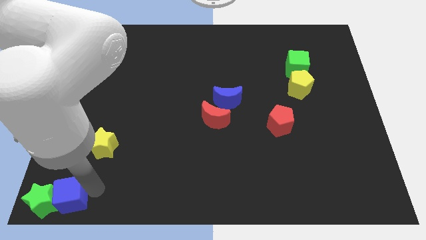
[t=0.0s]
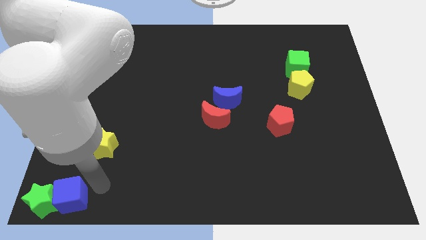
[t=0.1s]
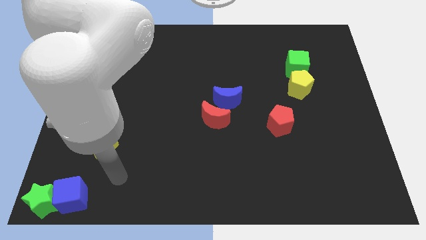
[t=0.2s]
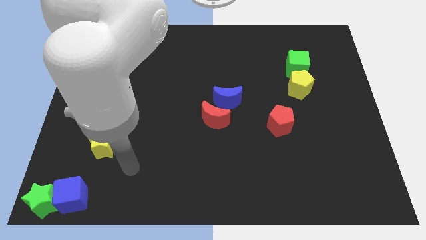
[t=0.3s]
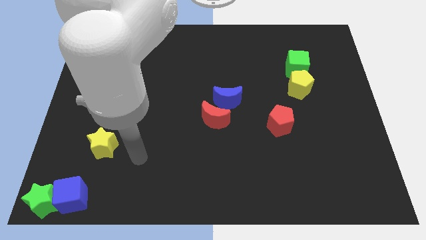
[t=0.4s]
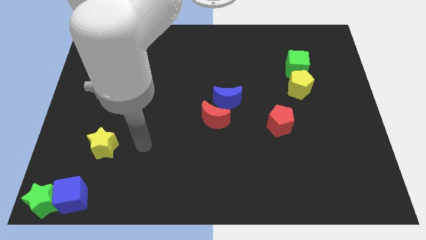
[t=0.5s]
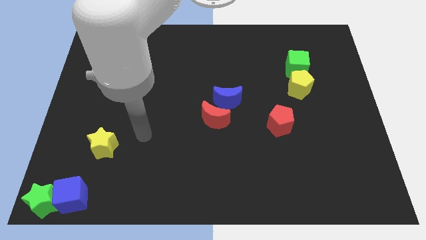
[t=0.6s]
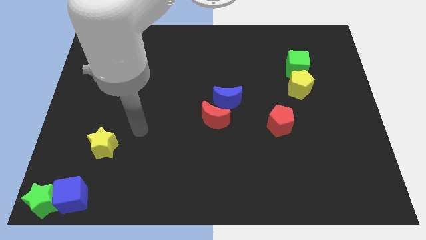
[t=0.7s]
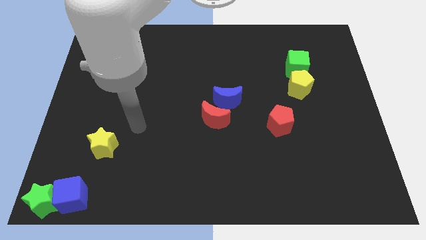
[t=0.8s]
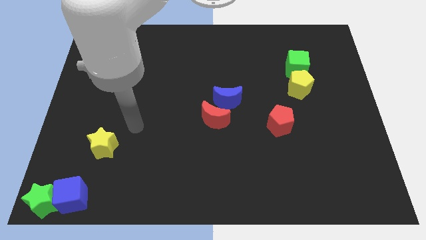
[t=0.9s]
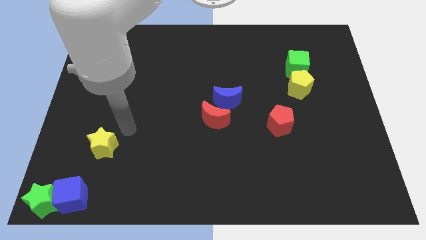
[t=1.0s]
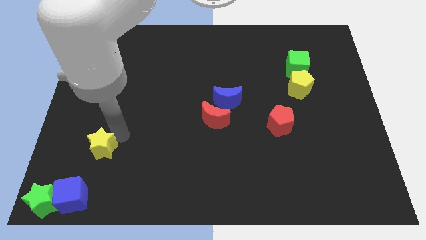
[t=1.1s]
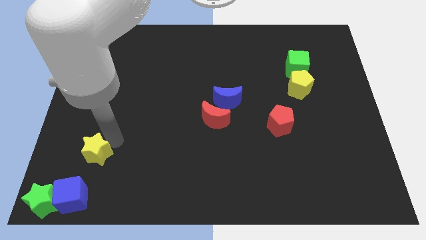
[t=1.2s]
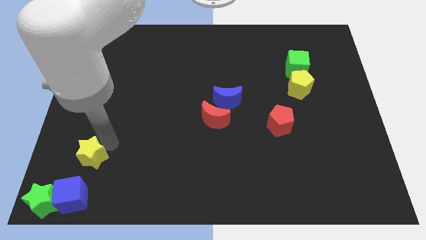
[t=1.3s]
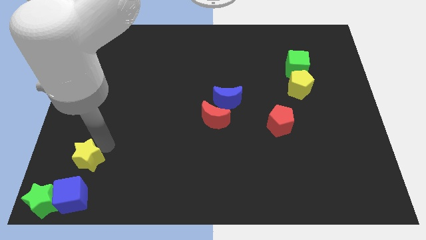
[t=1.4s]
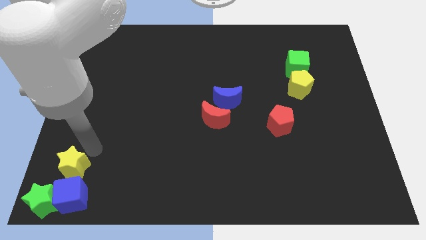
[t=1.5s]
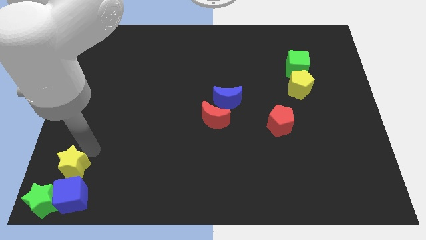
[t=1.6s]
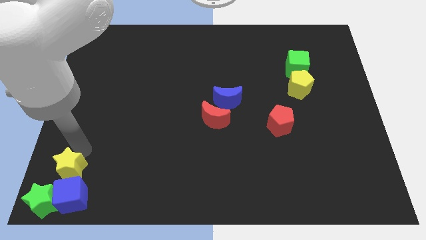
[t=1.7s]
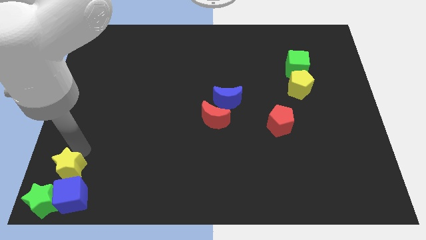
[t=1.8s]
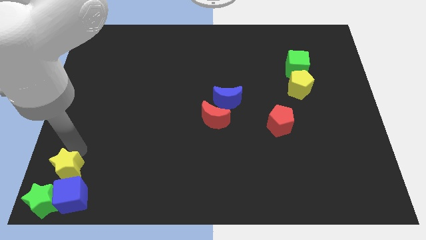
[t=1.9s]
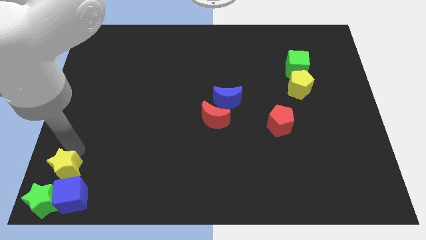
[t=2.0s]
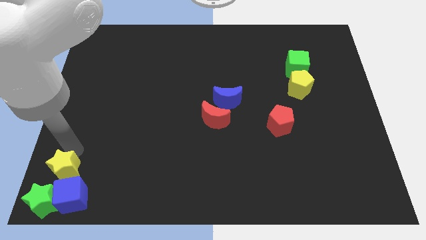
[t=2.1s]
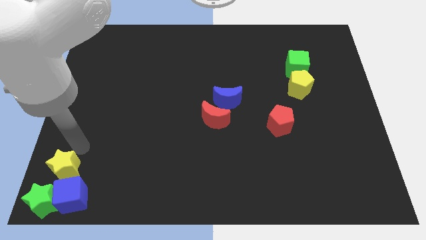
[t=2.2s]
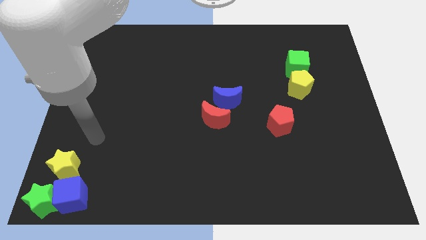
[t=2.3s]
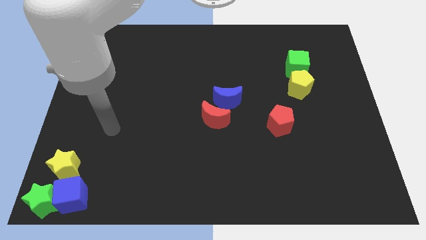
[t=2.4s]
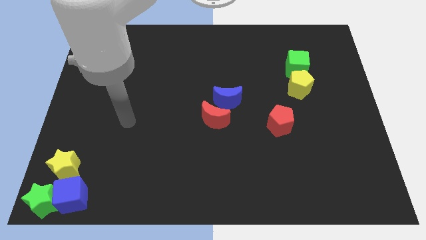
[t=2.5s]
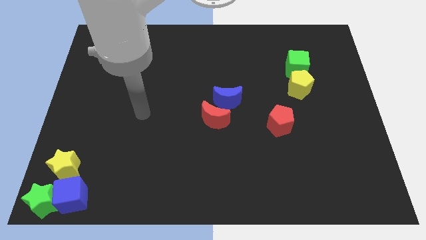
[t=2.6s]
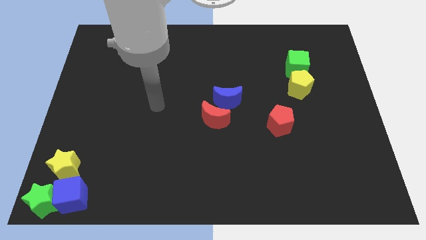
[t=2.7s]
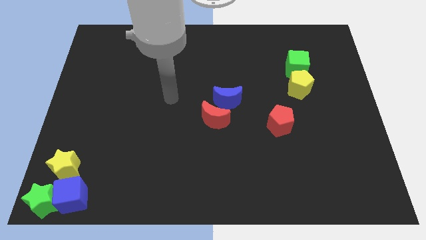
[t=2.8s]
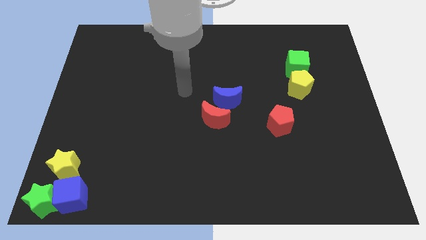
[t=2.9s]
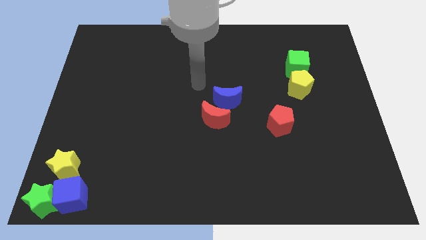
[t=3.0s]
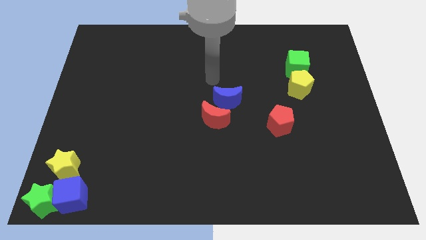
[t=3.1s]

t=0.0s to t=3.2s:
place the yellow star above the blue cube

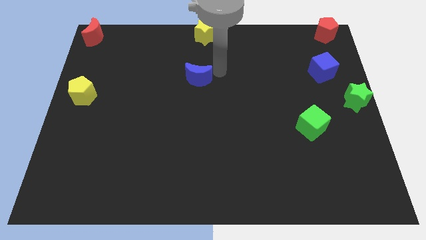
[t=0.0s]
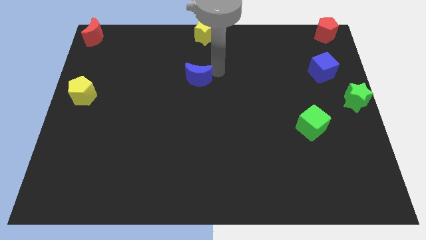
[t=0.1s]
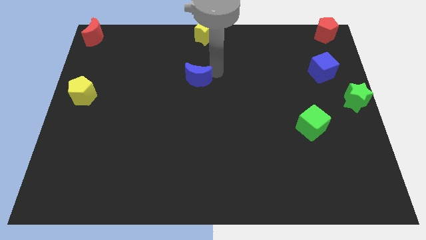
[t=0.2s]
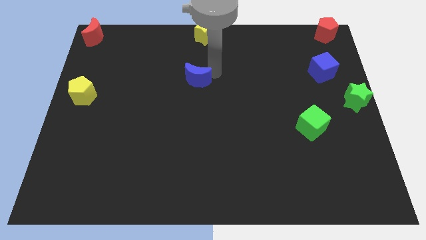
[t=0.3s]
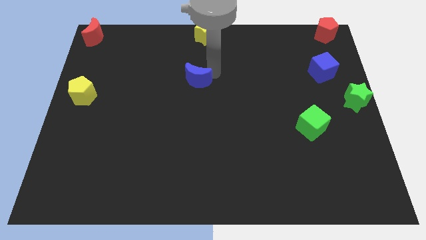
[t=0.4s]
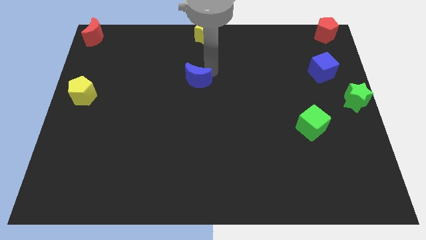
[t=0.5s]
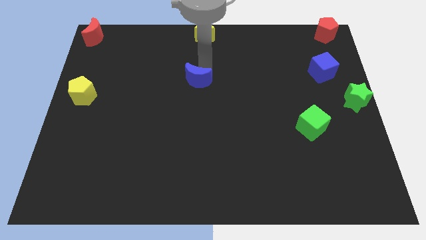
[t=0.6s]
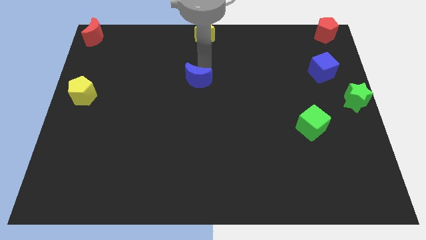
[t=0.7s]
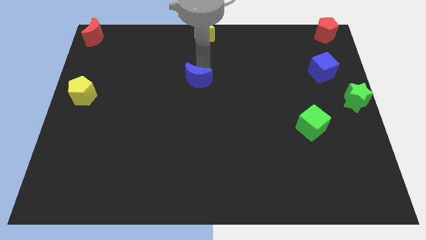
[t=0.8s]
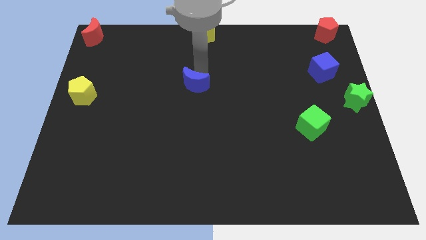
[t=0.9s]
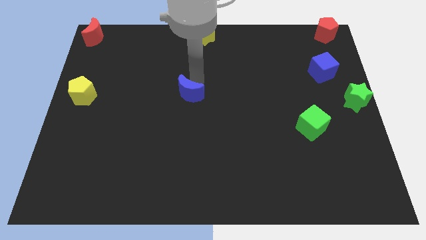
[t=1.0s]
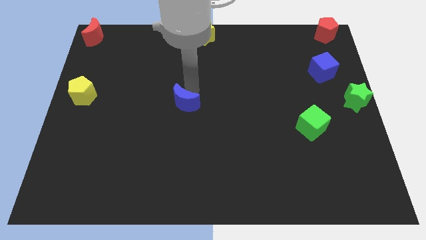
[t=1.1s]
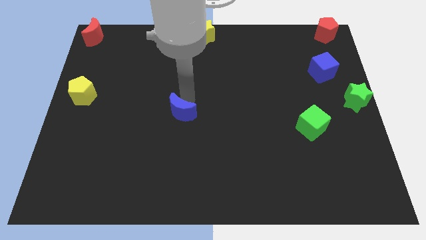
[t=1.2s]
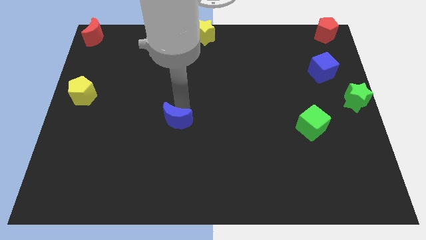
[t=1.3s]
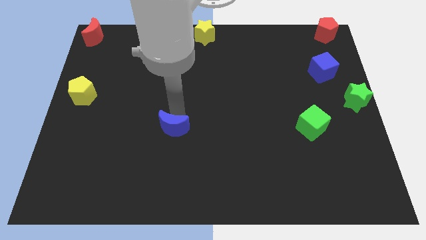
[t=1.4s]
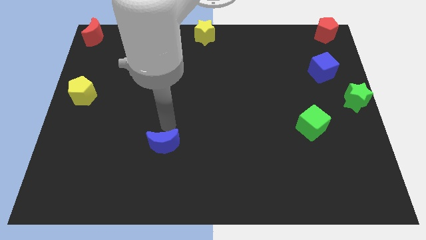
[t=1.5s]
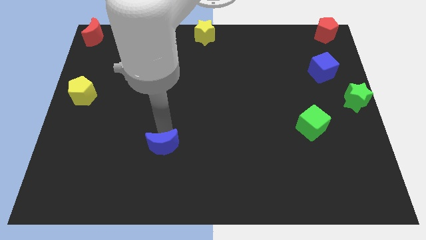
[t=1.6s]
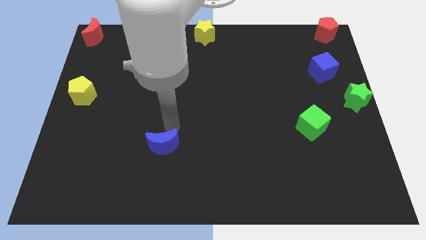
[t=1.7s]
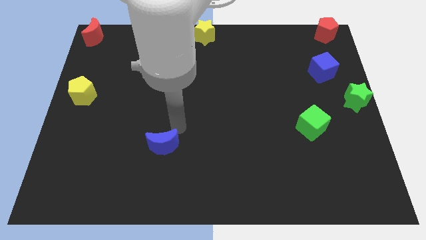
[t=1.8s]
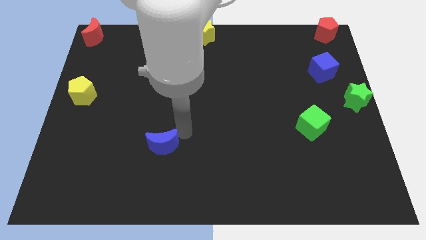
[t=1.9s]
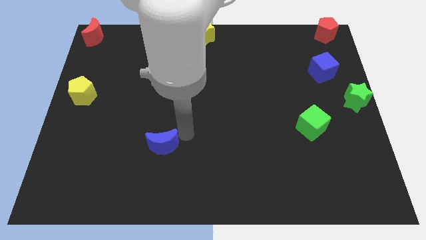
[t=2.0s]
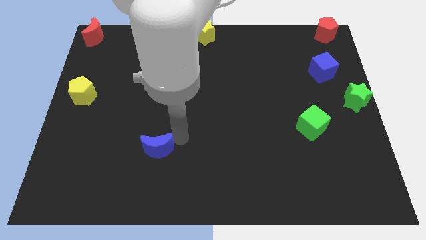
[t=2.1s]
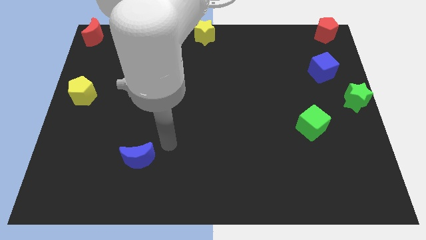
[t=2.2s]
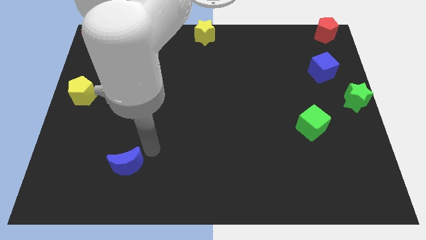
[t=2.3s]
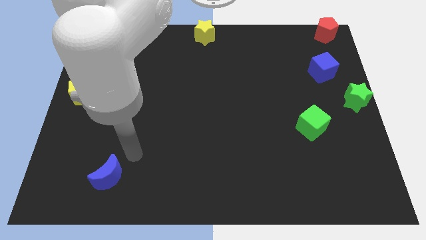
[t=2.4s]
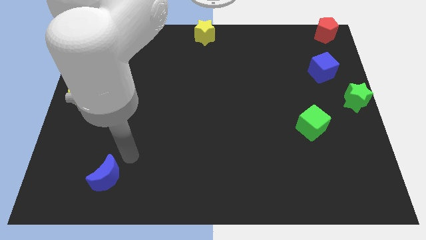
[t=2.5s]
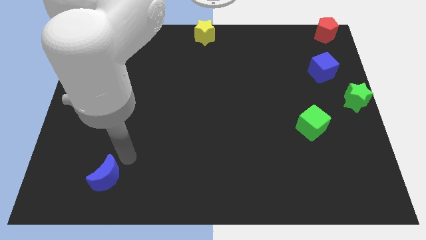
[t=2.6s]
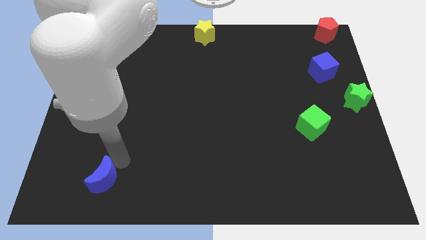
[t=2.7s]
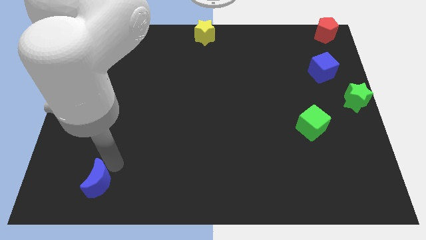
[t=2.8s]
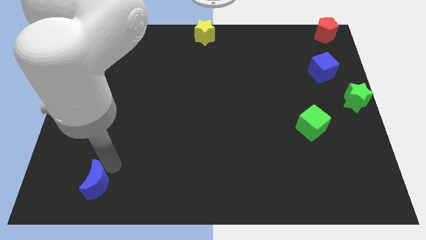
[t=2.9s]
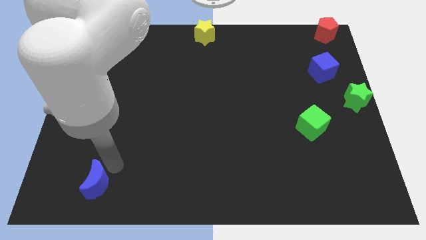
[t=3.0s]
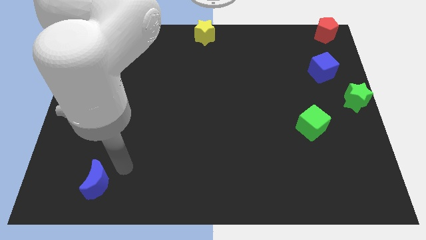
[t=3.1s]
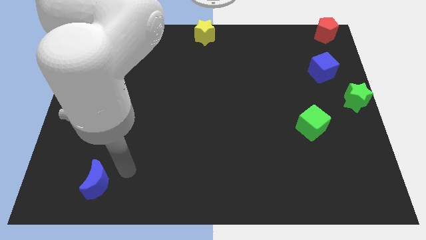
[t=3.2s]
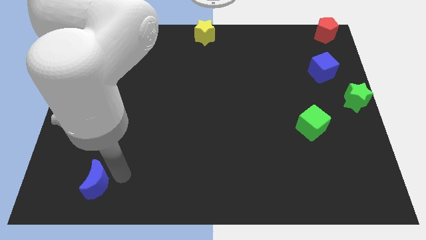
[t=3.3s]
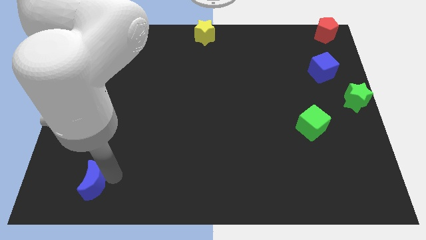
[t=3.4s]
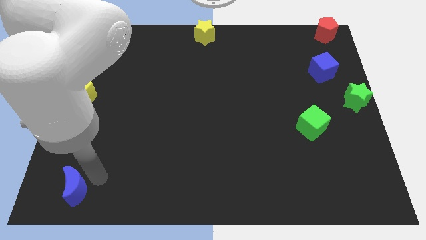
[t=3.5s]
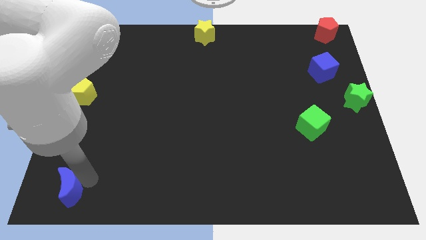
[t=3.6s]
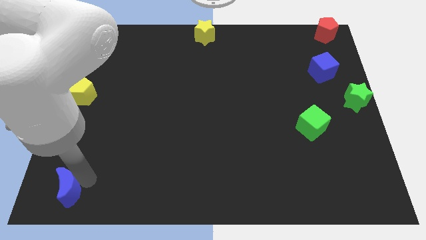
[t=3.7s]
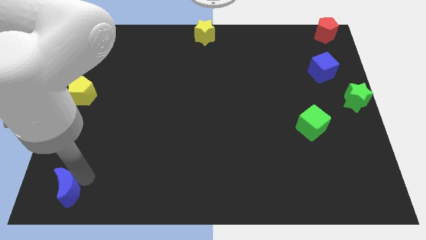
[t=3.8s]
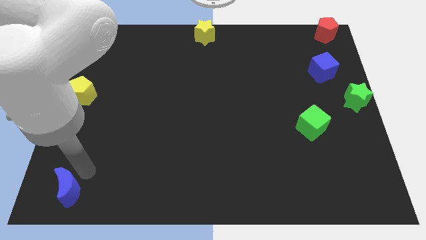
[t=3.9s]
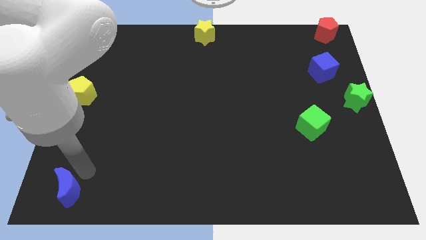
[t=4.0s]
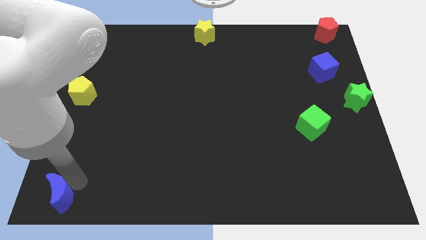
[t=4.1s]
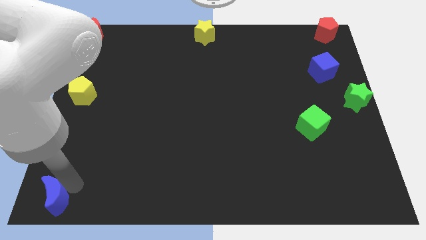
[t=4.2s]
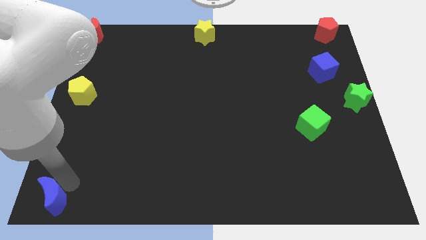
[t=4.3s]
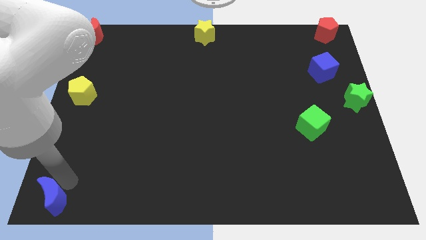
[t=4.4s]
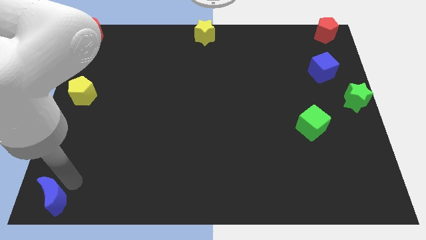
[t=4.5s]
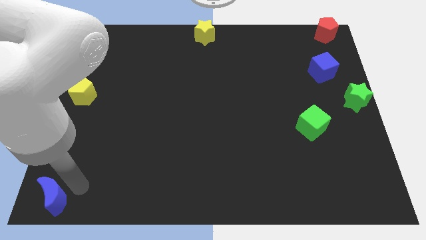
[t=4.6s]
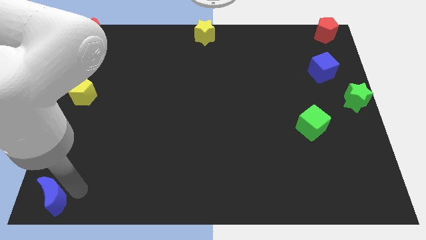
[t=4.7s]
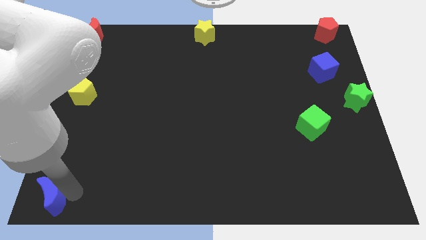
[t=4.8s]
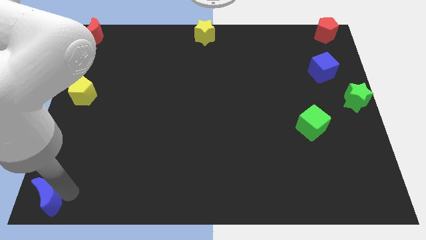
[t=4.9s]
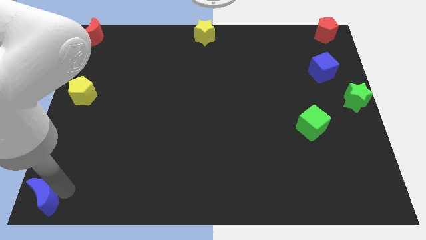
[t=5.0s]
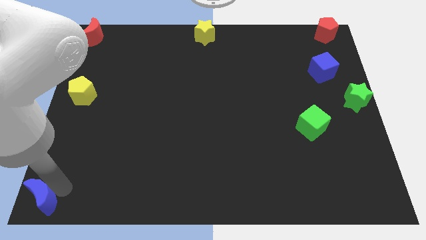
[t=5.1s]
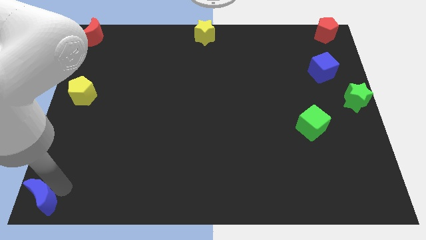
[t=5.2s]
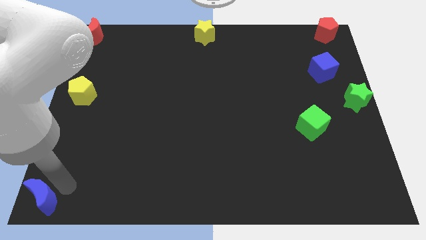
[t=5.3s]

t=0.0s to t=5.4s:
push the blue moon to the bottom left corner of the board

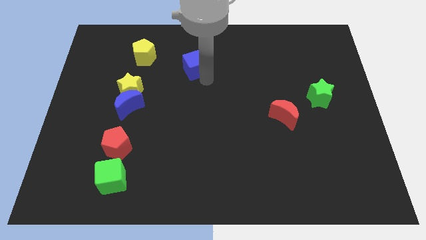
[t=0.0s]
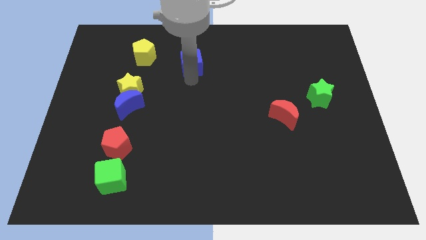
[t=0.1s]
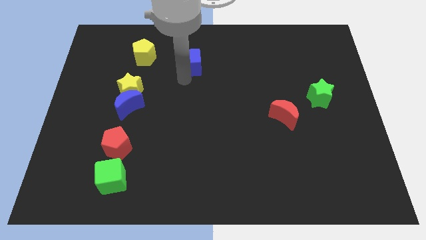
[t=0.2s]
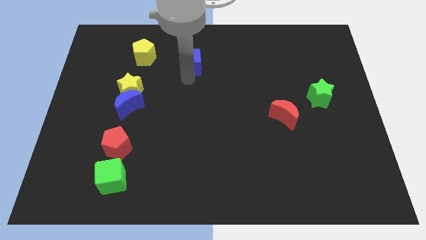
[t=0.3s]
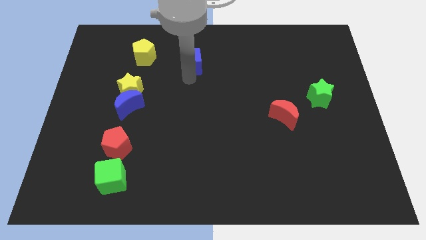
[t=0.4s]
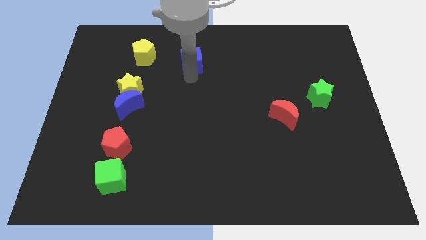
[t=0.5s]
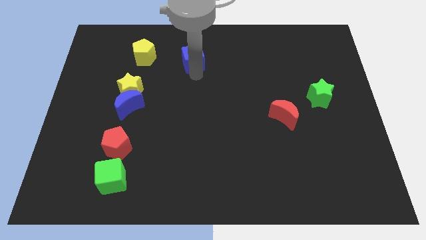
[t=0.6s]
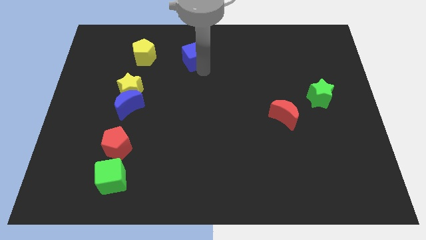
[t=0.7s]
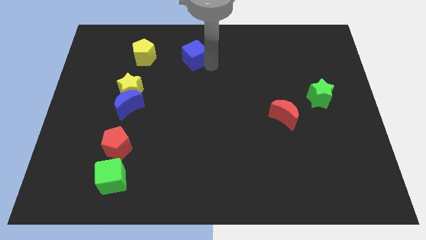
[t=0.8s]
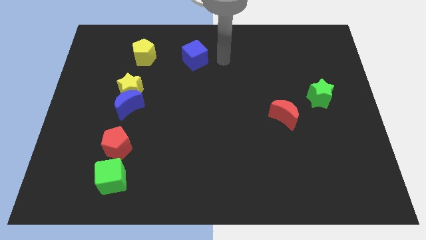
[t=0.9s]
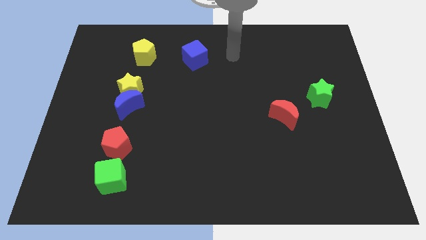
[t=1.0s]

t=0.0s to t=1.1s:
place the blue cube parallel to the right of the yellow pentagon
